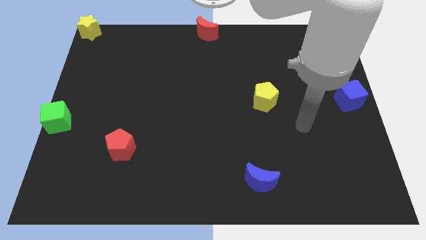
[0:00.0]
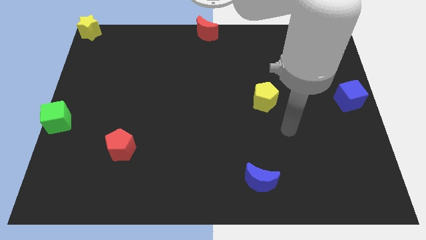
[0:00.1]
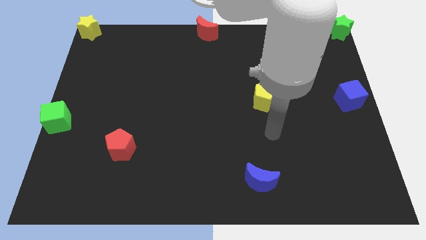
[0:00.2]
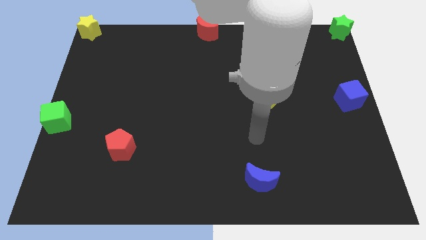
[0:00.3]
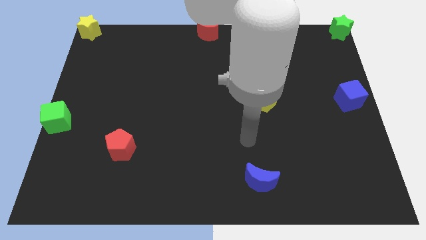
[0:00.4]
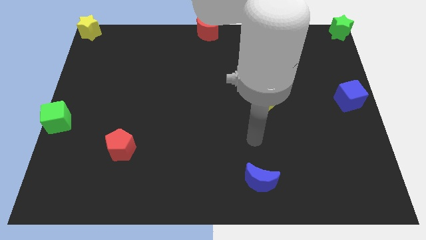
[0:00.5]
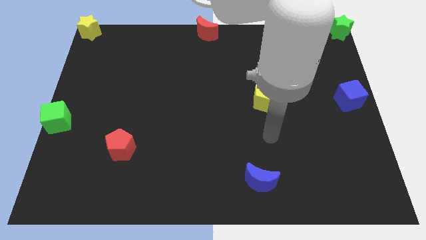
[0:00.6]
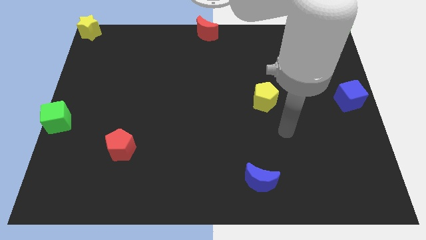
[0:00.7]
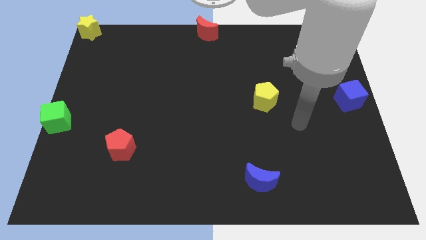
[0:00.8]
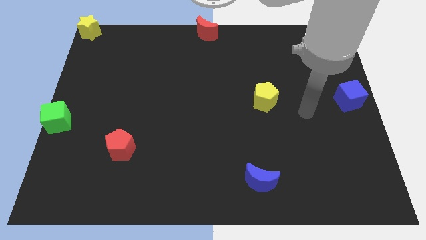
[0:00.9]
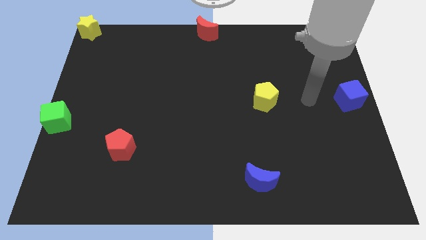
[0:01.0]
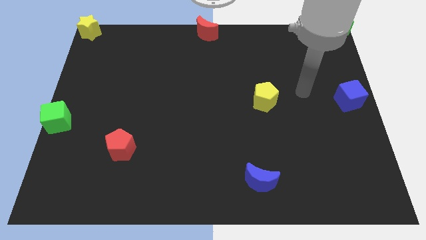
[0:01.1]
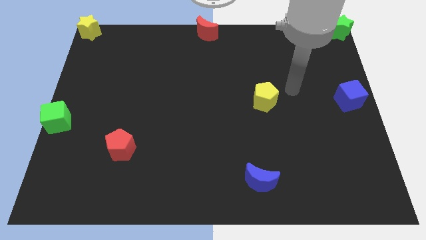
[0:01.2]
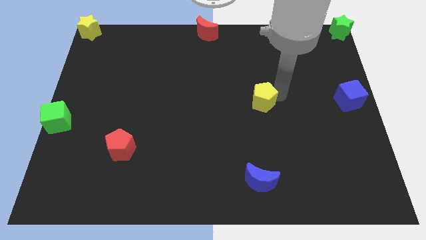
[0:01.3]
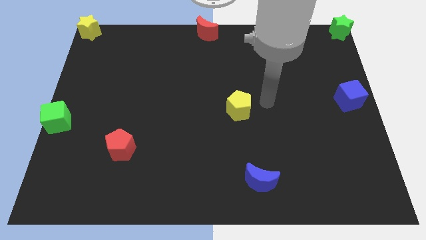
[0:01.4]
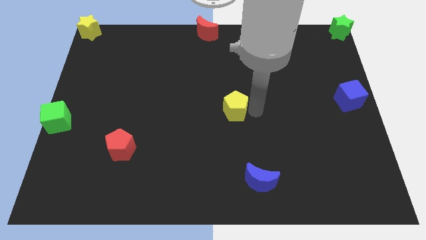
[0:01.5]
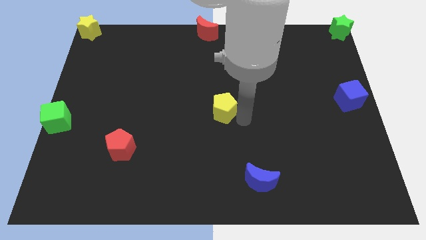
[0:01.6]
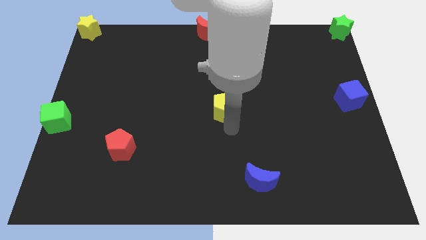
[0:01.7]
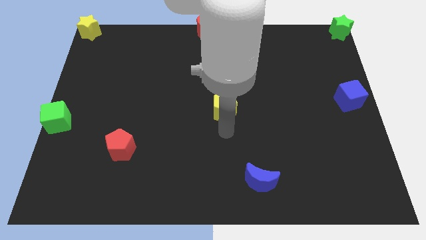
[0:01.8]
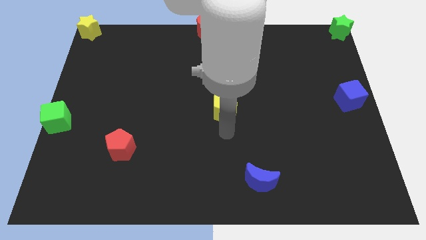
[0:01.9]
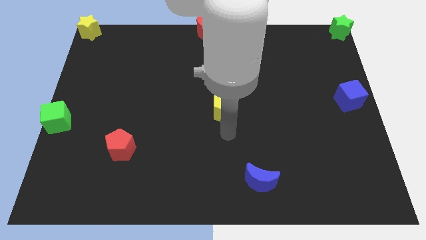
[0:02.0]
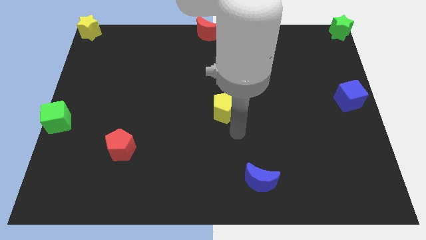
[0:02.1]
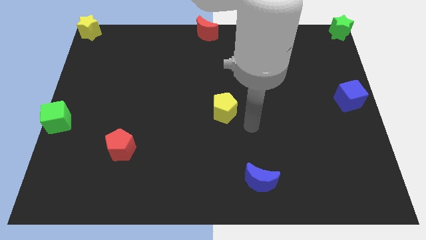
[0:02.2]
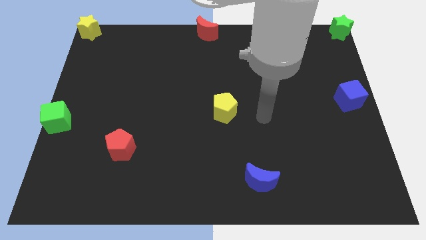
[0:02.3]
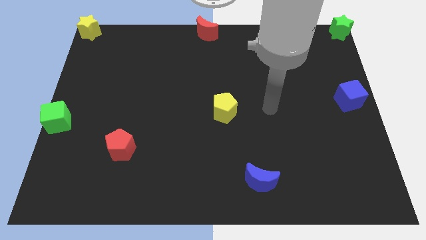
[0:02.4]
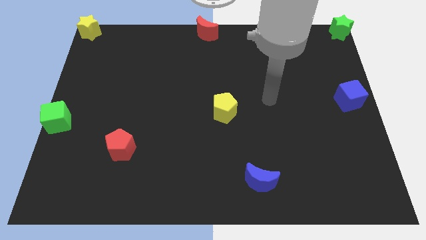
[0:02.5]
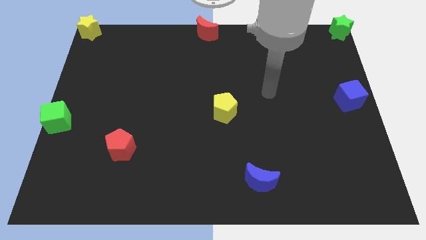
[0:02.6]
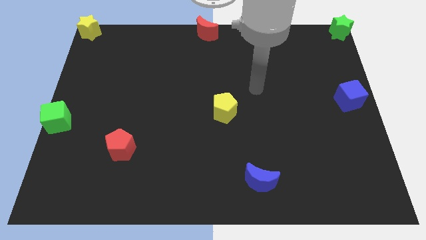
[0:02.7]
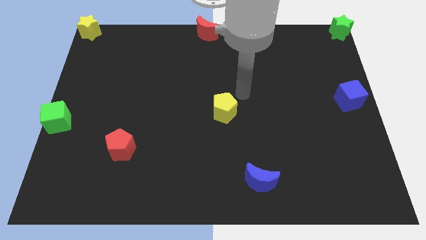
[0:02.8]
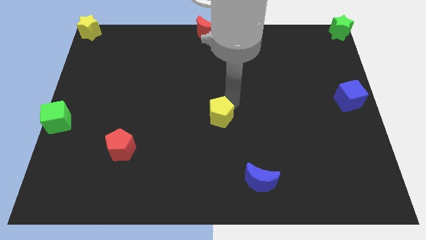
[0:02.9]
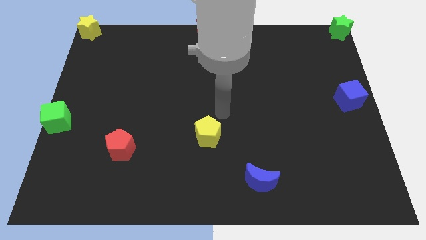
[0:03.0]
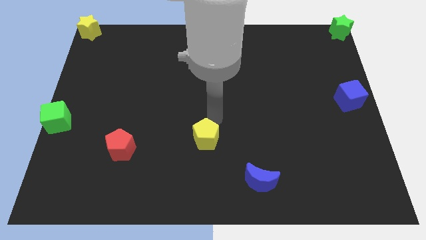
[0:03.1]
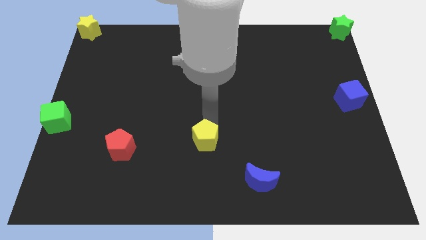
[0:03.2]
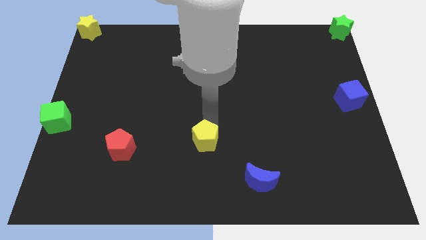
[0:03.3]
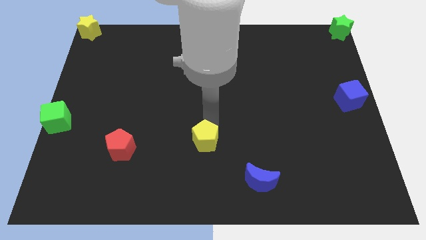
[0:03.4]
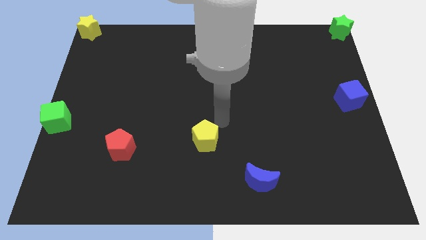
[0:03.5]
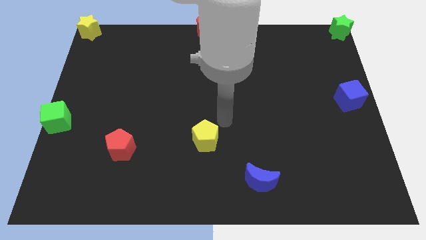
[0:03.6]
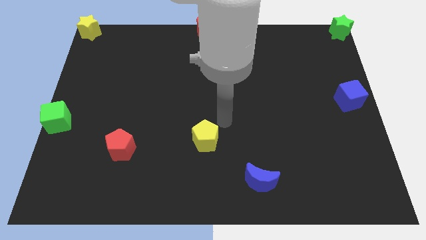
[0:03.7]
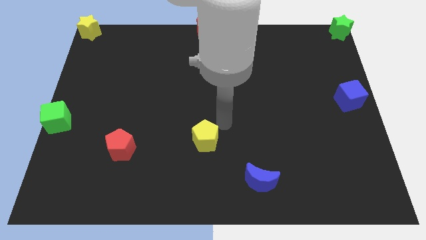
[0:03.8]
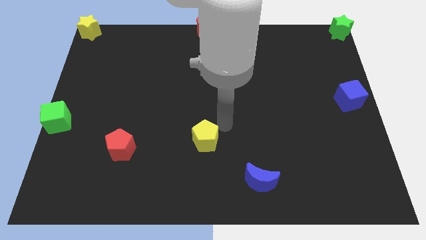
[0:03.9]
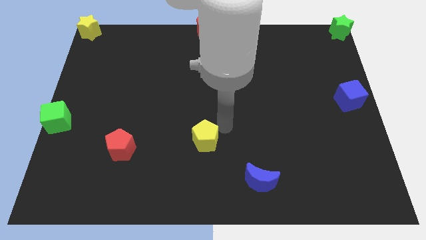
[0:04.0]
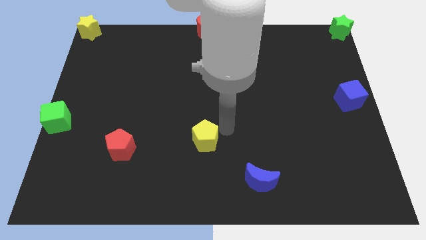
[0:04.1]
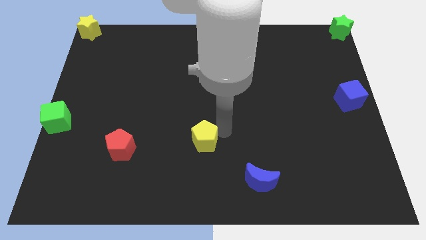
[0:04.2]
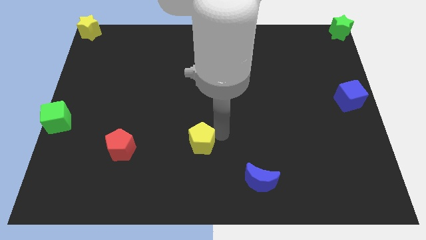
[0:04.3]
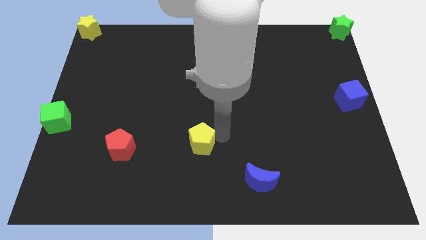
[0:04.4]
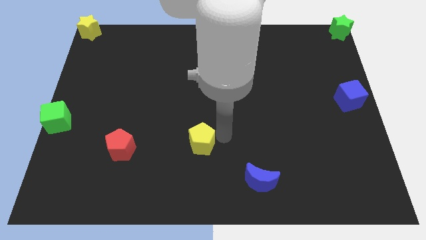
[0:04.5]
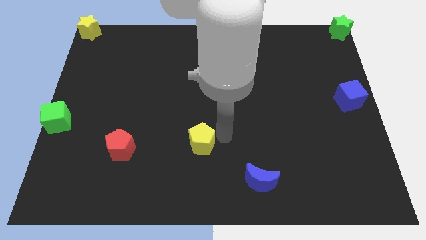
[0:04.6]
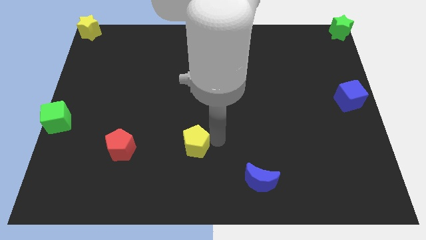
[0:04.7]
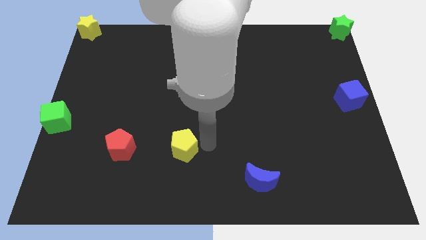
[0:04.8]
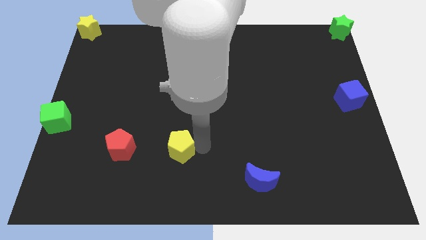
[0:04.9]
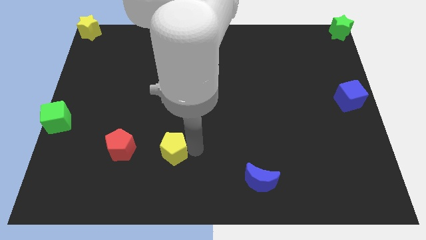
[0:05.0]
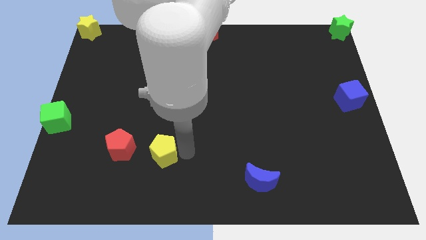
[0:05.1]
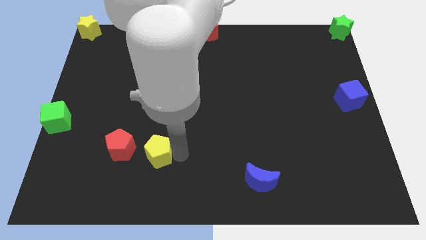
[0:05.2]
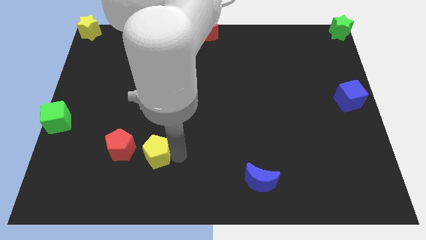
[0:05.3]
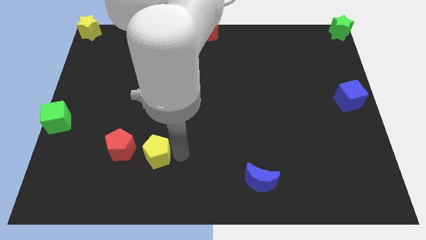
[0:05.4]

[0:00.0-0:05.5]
move the yellow pentagon near to the right side of the red pentagon

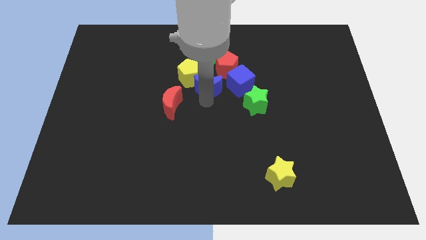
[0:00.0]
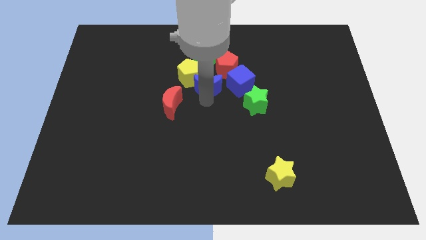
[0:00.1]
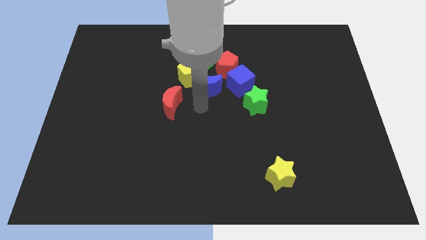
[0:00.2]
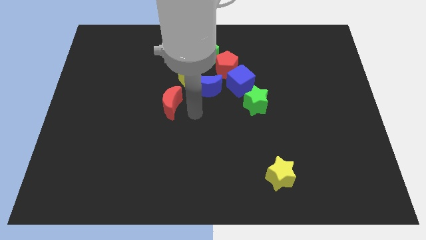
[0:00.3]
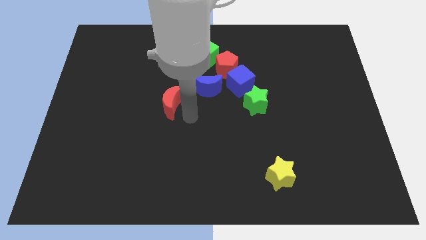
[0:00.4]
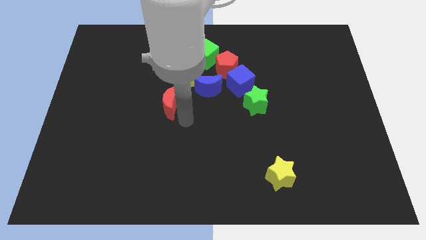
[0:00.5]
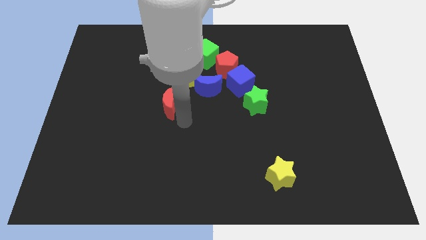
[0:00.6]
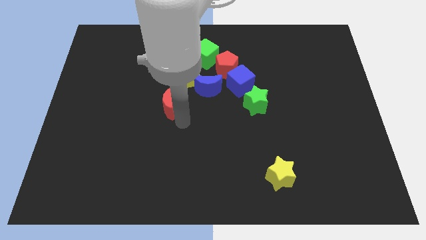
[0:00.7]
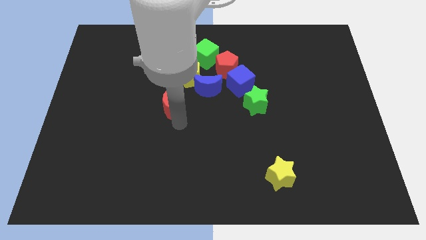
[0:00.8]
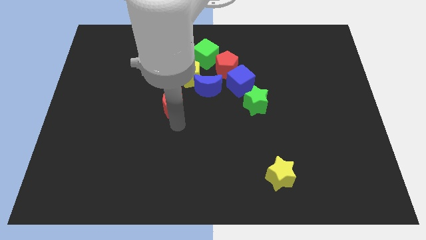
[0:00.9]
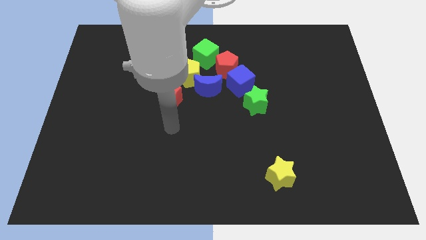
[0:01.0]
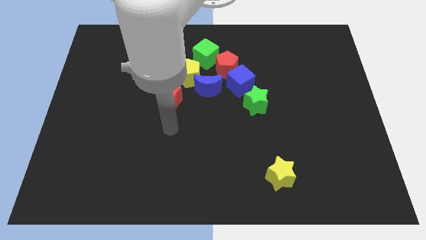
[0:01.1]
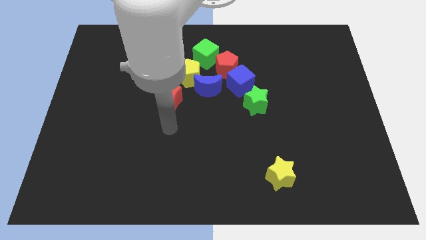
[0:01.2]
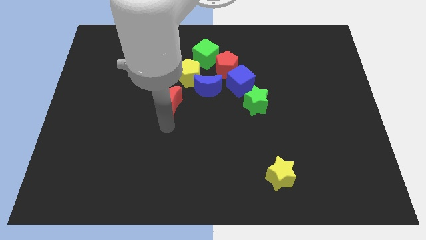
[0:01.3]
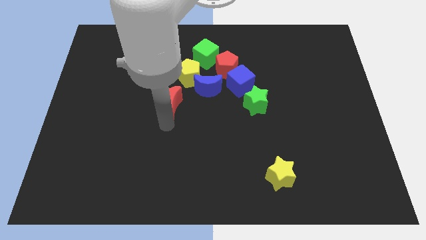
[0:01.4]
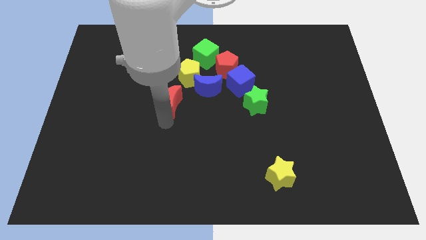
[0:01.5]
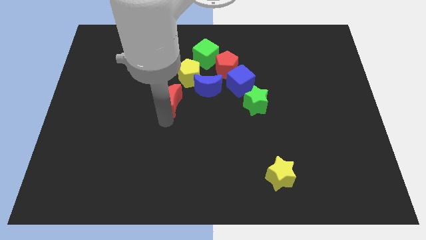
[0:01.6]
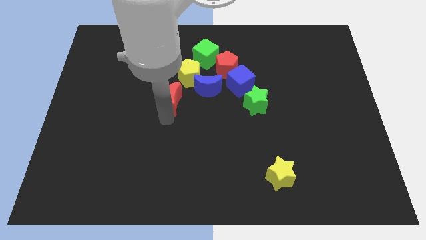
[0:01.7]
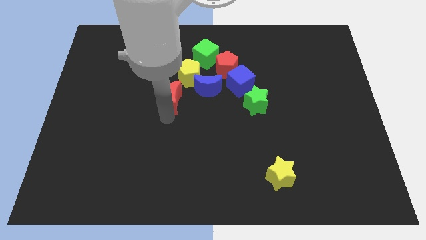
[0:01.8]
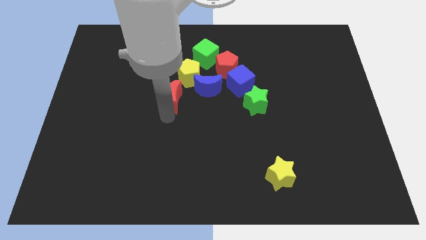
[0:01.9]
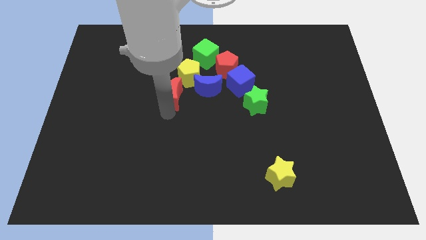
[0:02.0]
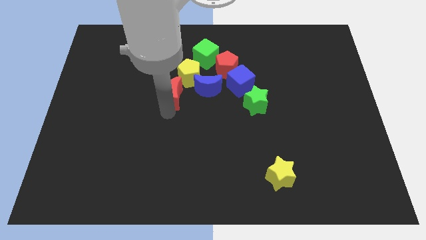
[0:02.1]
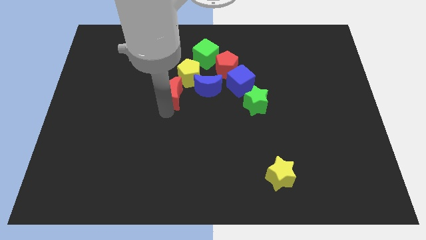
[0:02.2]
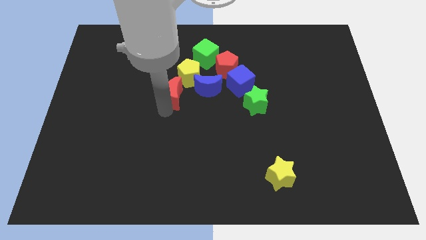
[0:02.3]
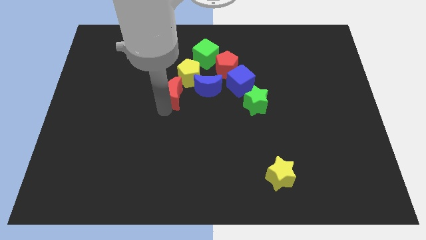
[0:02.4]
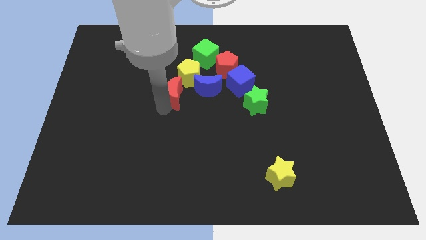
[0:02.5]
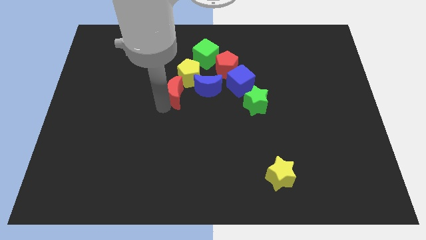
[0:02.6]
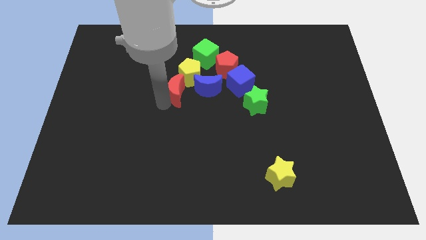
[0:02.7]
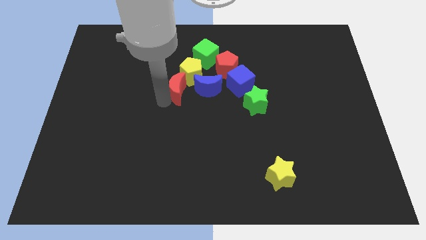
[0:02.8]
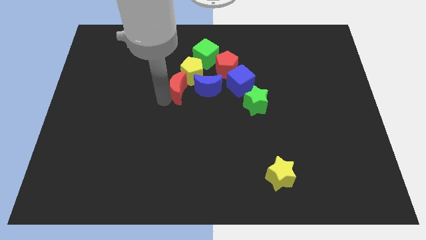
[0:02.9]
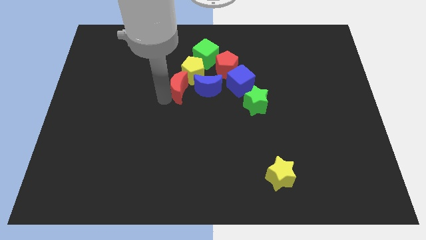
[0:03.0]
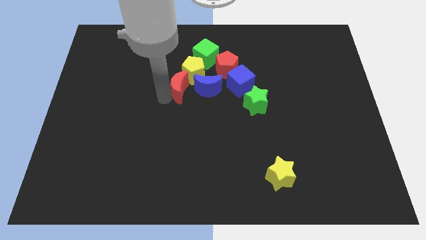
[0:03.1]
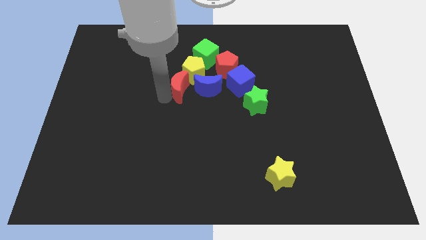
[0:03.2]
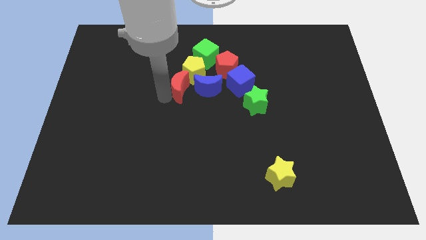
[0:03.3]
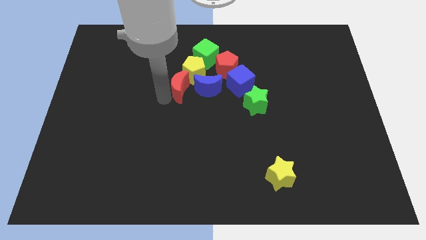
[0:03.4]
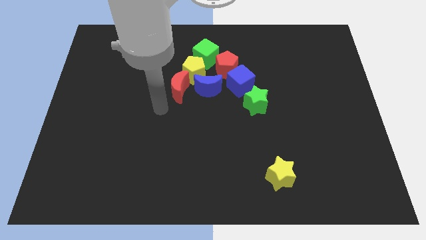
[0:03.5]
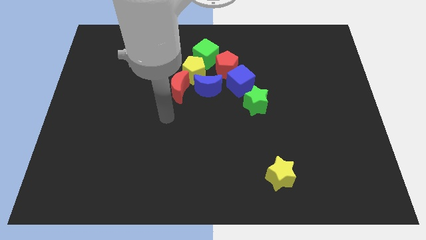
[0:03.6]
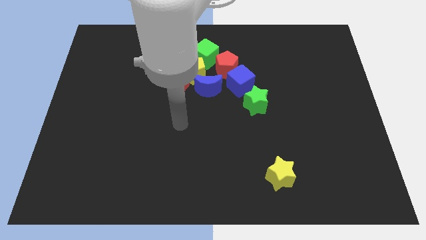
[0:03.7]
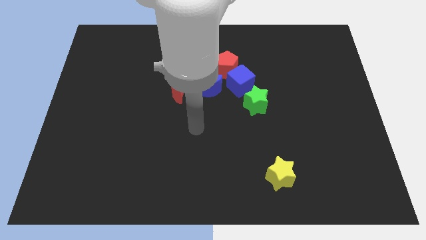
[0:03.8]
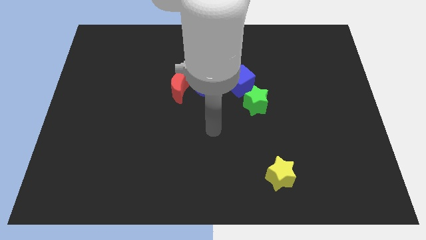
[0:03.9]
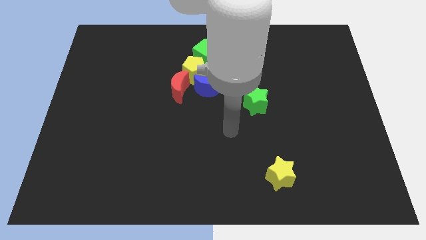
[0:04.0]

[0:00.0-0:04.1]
push the red moon into the yellow pentagon
